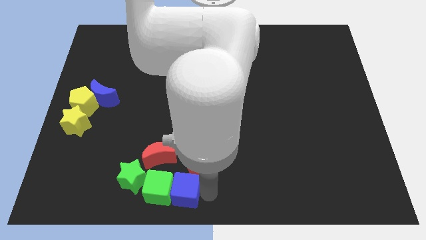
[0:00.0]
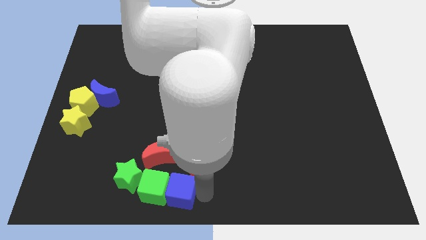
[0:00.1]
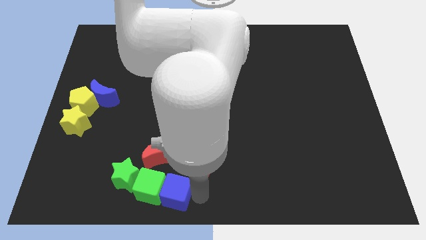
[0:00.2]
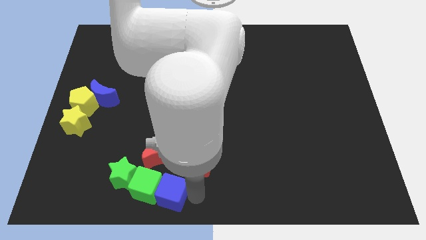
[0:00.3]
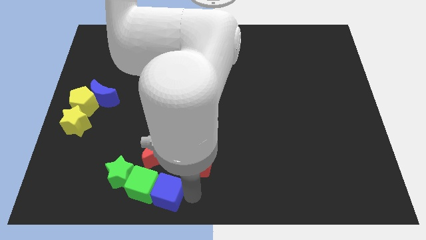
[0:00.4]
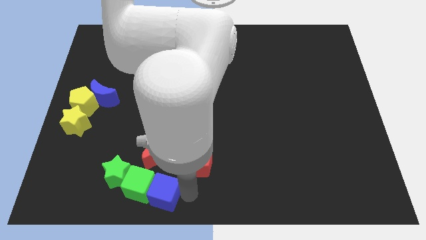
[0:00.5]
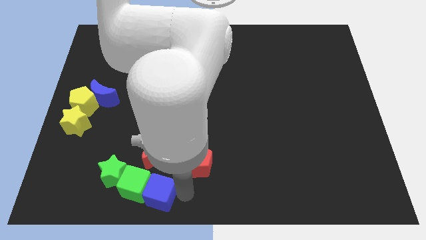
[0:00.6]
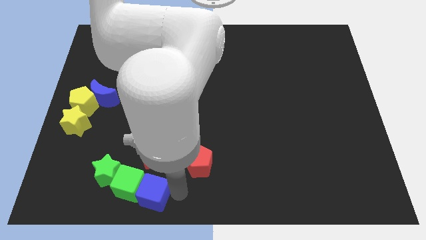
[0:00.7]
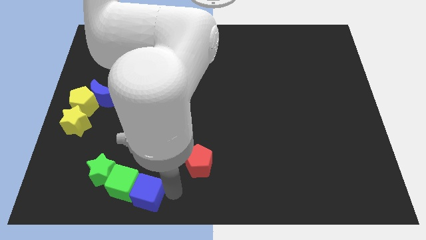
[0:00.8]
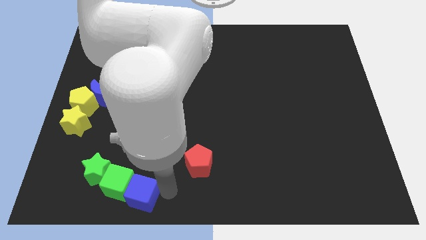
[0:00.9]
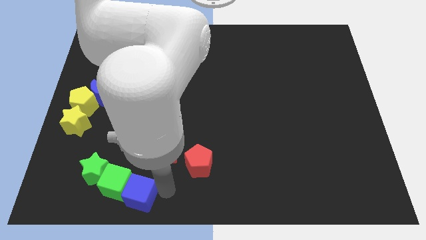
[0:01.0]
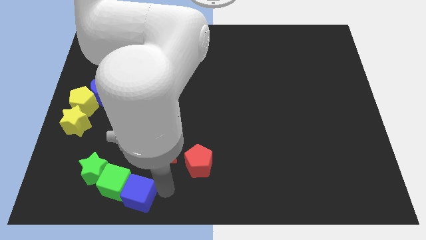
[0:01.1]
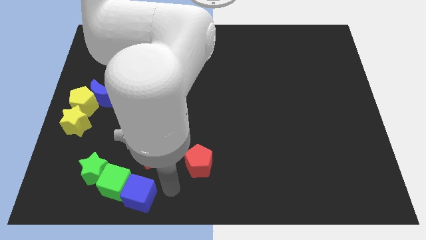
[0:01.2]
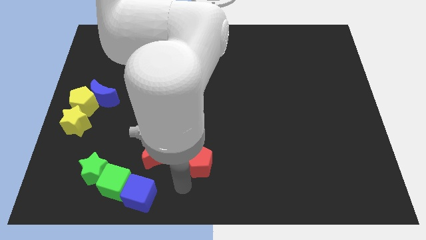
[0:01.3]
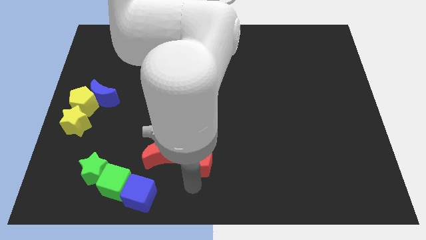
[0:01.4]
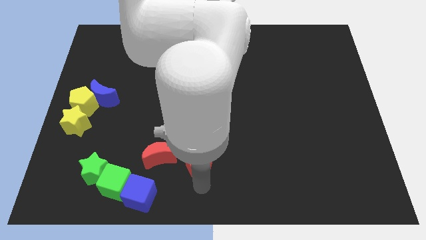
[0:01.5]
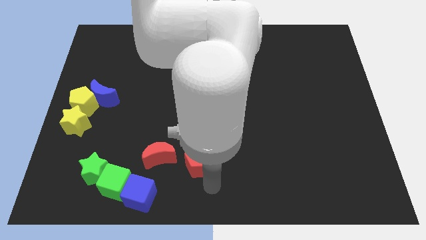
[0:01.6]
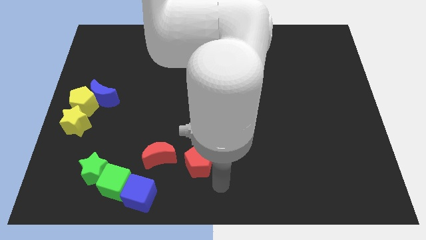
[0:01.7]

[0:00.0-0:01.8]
move the blue cube green cube and green star to the left side of the table

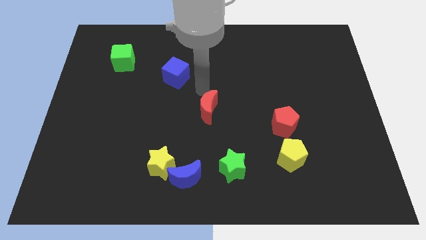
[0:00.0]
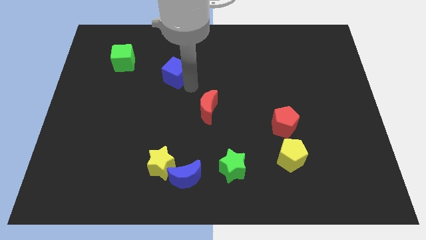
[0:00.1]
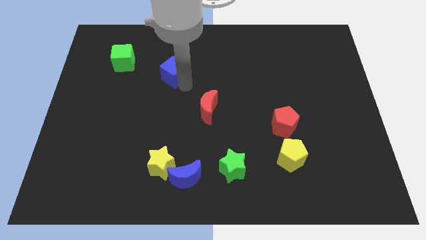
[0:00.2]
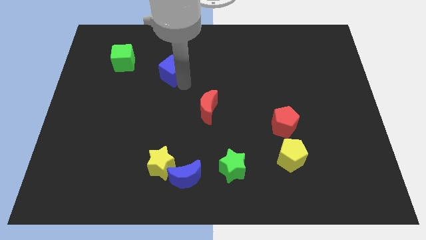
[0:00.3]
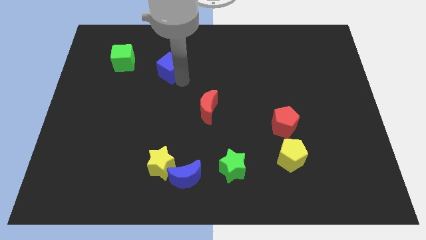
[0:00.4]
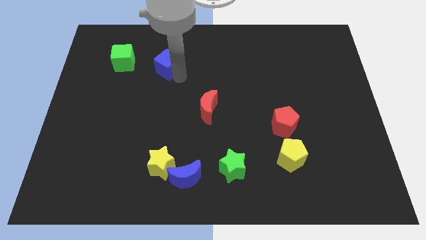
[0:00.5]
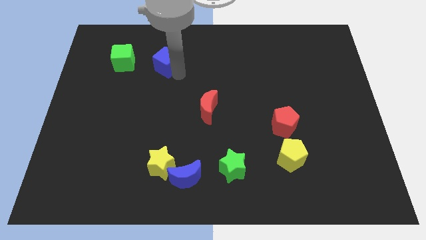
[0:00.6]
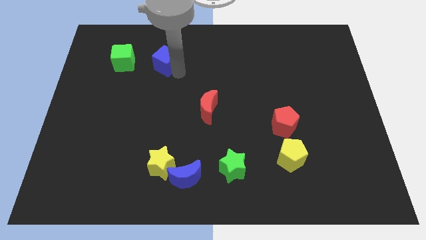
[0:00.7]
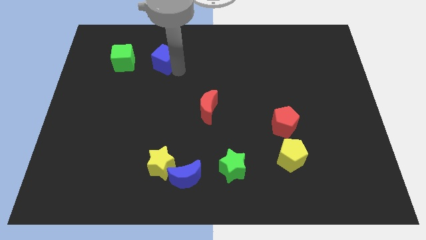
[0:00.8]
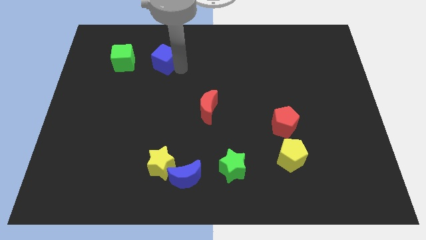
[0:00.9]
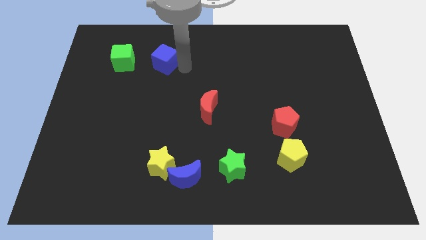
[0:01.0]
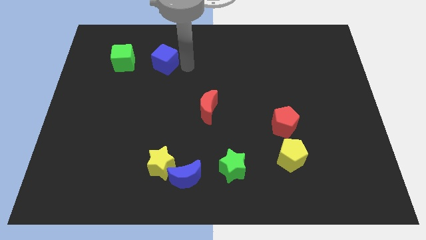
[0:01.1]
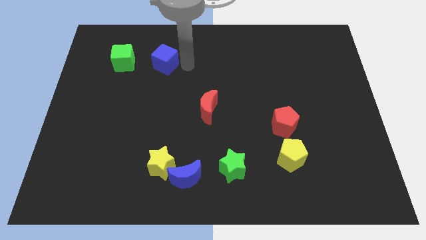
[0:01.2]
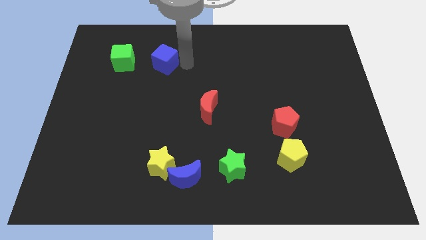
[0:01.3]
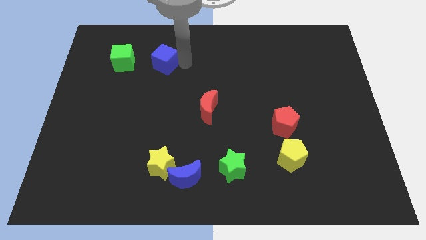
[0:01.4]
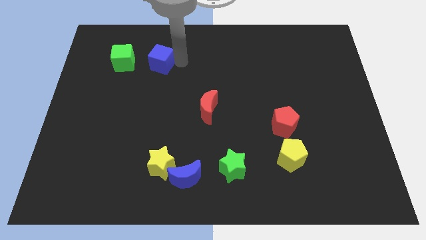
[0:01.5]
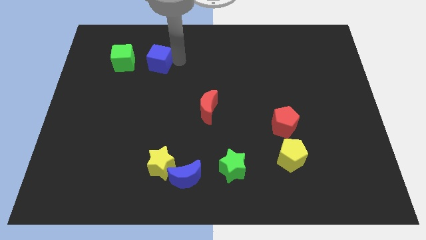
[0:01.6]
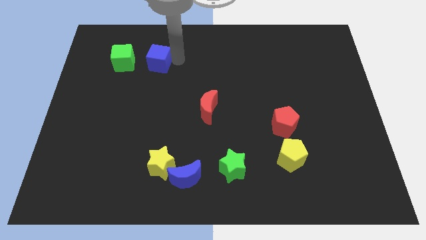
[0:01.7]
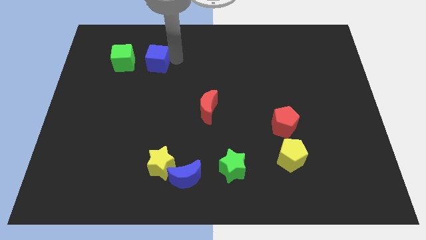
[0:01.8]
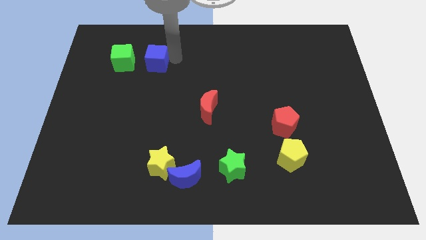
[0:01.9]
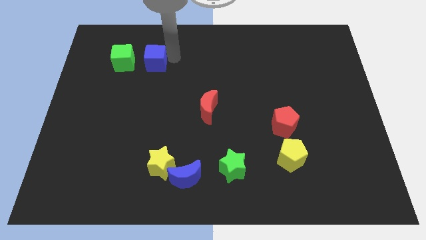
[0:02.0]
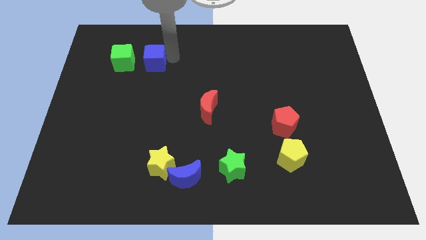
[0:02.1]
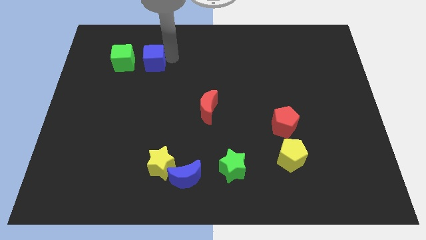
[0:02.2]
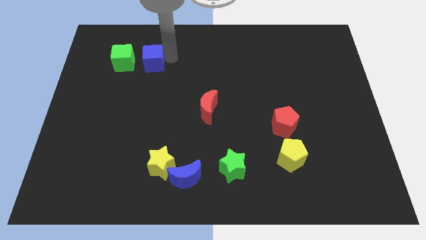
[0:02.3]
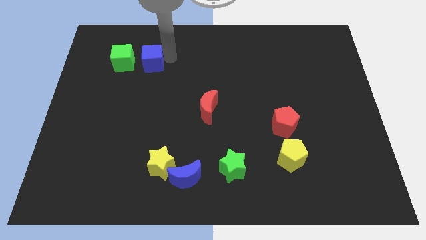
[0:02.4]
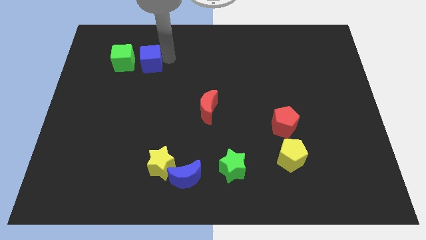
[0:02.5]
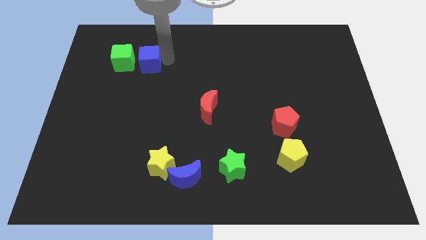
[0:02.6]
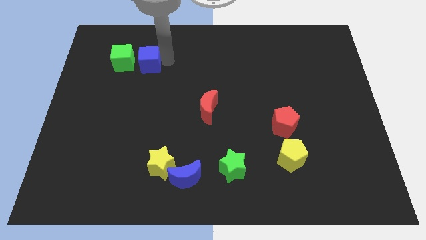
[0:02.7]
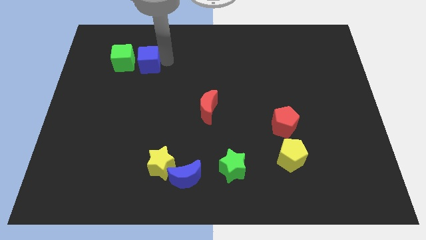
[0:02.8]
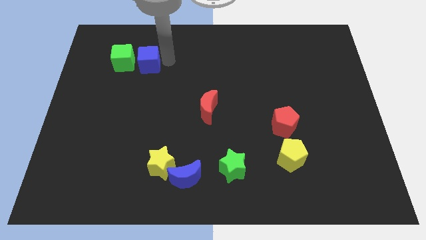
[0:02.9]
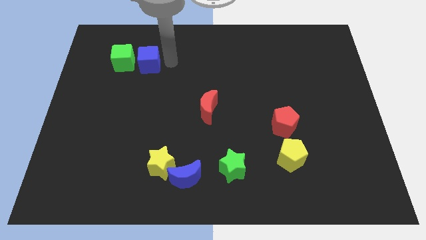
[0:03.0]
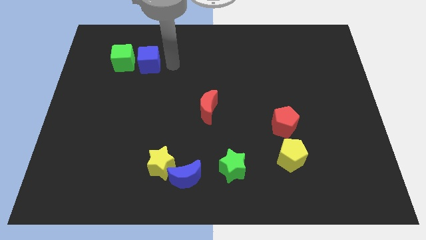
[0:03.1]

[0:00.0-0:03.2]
place blue cube beside green cube

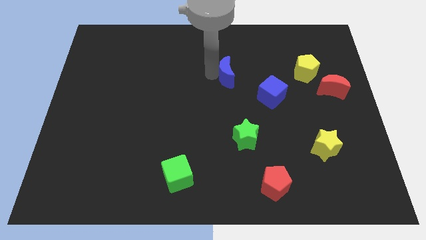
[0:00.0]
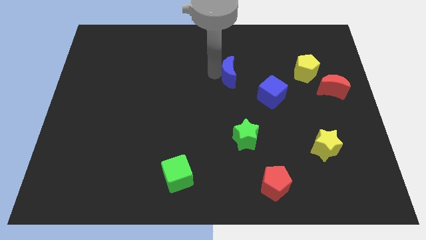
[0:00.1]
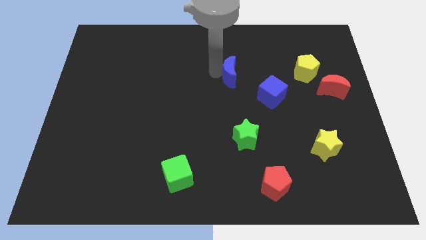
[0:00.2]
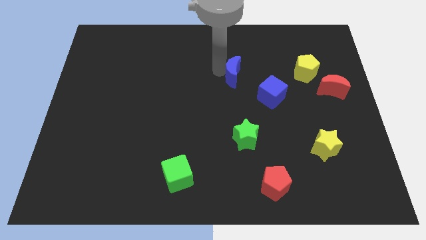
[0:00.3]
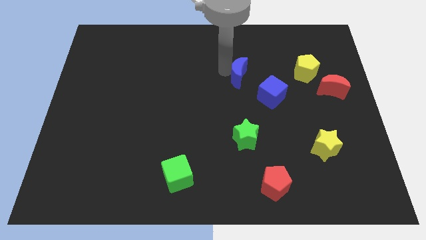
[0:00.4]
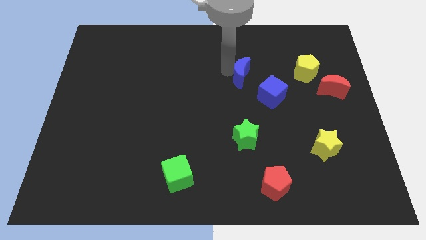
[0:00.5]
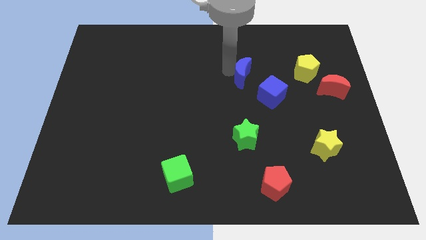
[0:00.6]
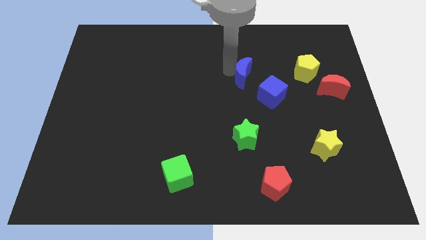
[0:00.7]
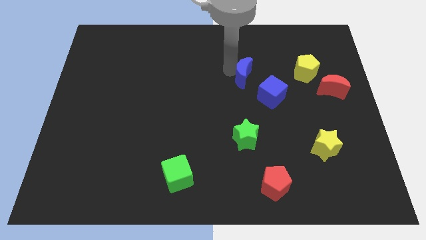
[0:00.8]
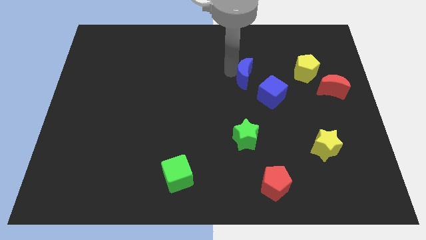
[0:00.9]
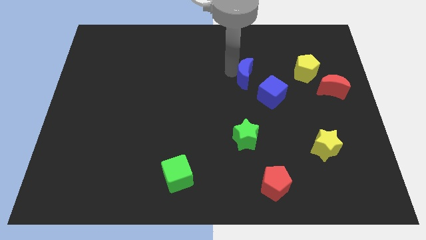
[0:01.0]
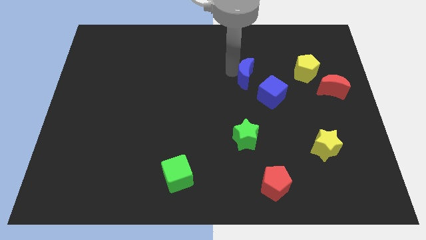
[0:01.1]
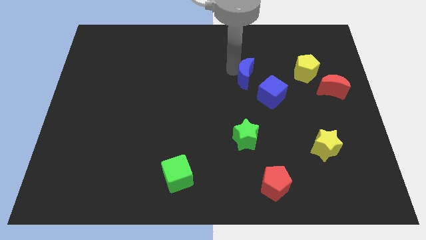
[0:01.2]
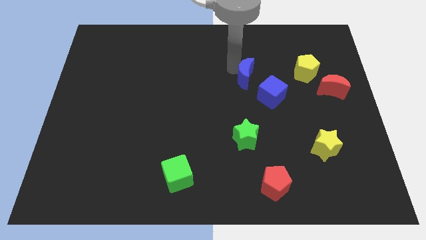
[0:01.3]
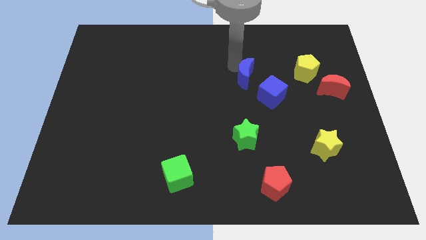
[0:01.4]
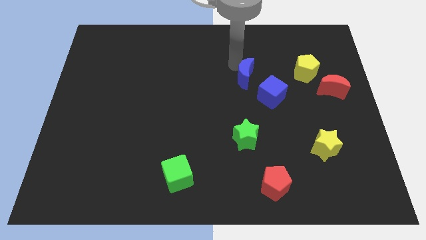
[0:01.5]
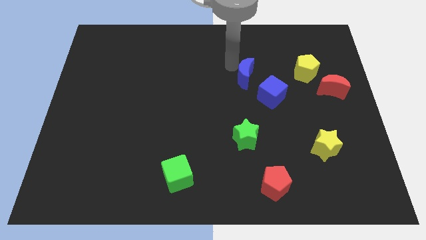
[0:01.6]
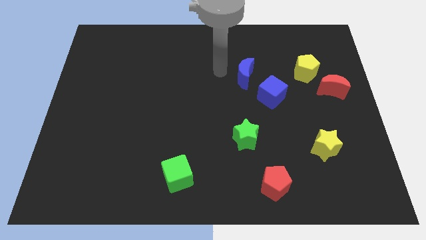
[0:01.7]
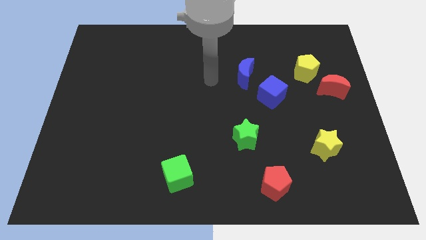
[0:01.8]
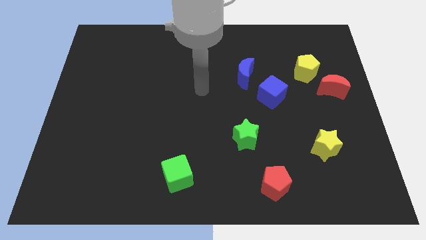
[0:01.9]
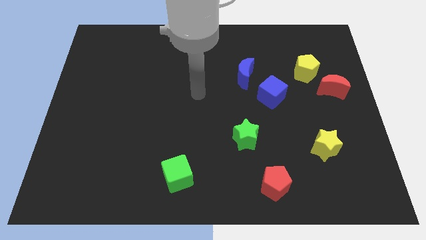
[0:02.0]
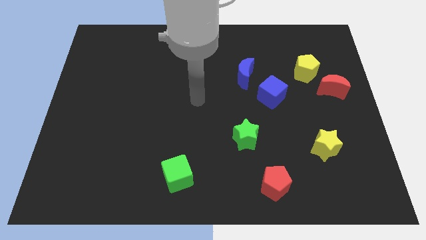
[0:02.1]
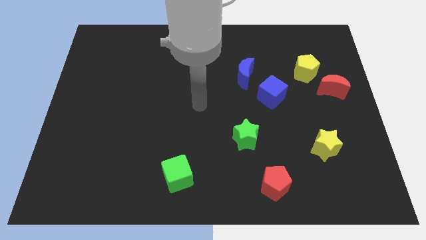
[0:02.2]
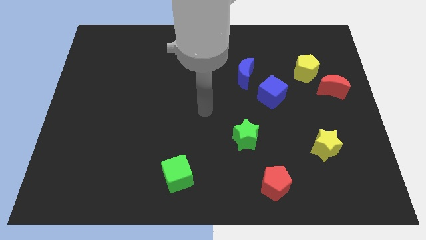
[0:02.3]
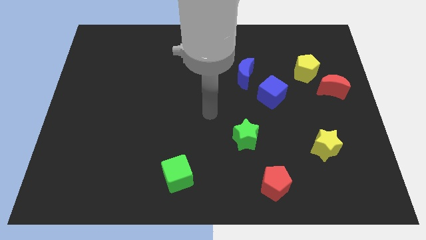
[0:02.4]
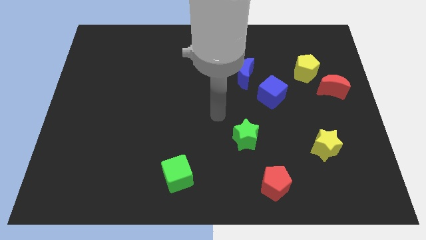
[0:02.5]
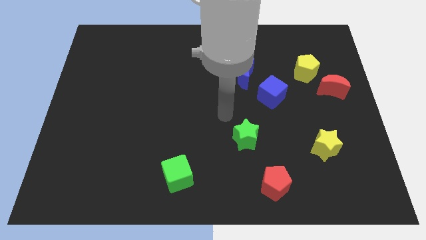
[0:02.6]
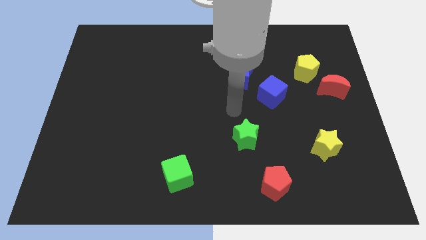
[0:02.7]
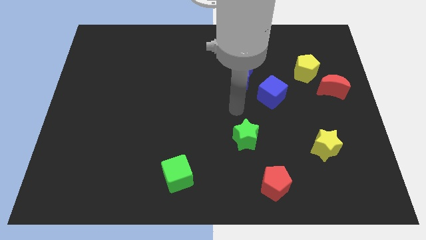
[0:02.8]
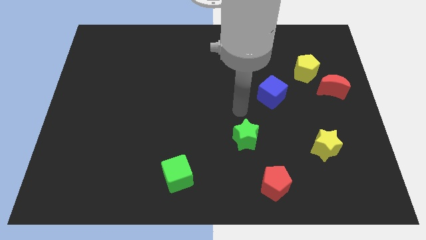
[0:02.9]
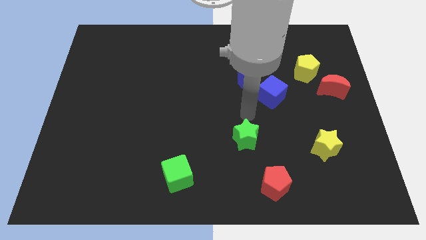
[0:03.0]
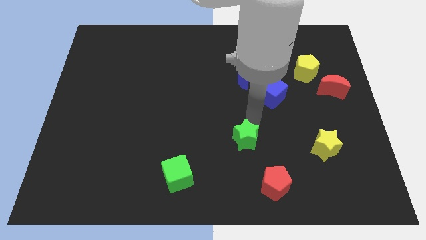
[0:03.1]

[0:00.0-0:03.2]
place your arm above the green star

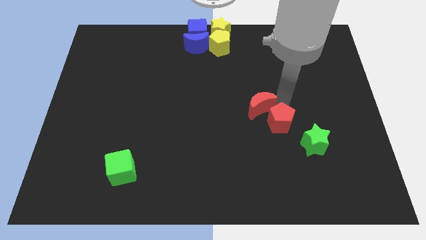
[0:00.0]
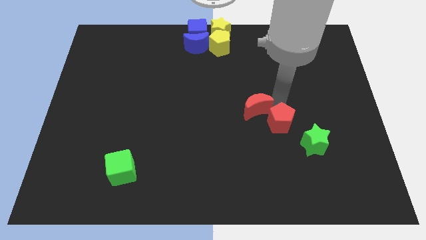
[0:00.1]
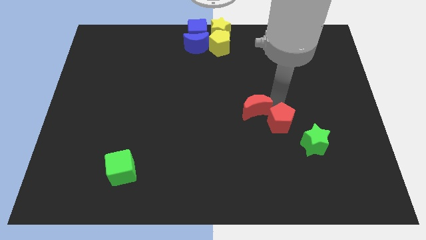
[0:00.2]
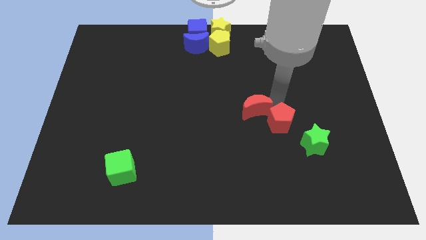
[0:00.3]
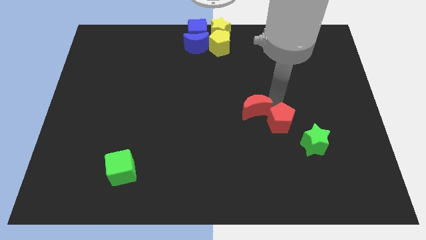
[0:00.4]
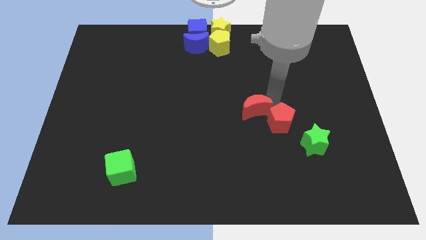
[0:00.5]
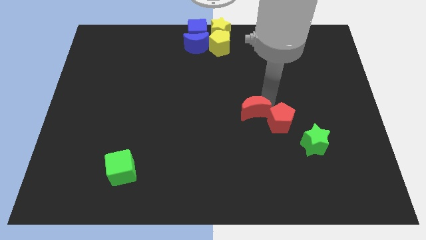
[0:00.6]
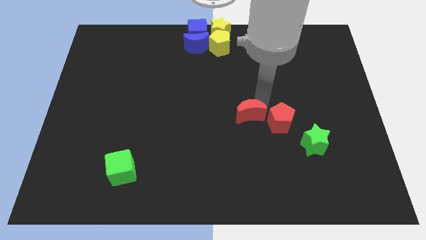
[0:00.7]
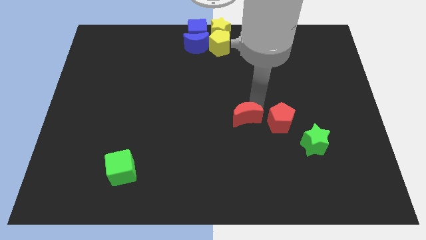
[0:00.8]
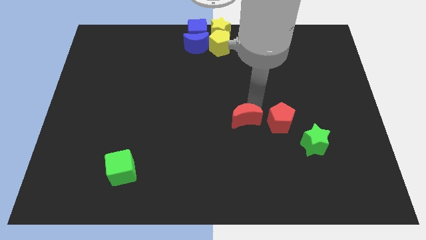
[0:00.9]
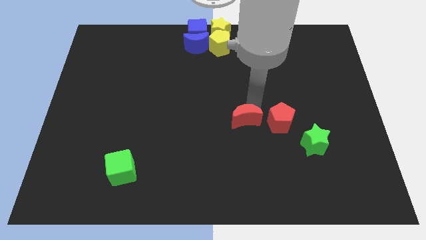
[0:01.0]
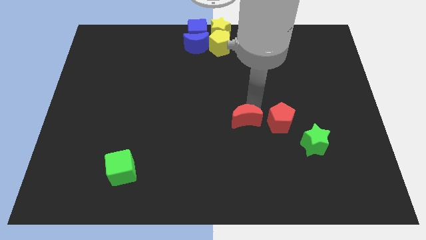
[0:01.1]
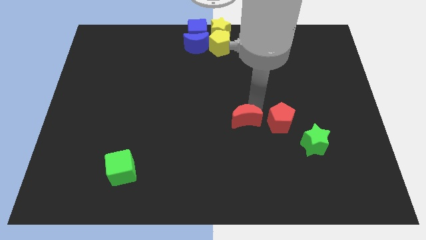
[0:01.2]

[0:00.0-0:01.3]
place the red crescent to the left of the red pentagon
